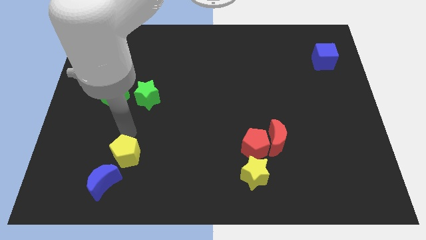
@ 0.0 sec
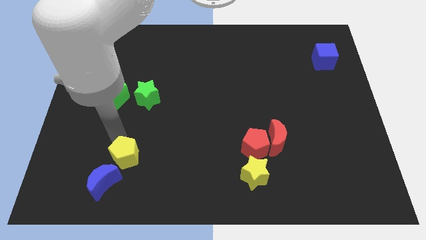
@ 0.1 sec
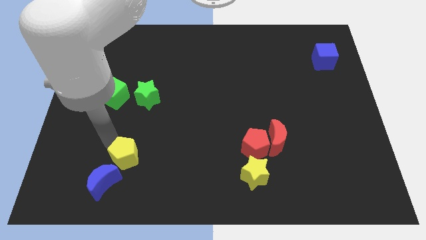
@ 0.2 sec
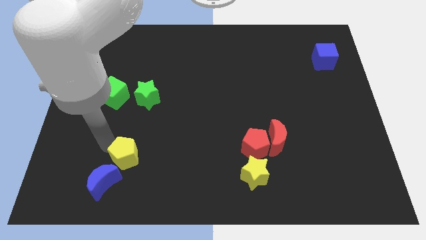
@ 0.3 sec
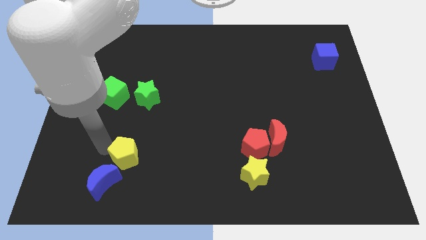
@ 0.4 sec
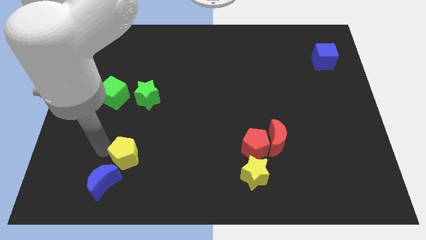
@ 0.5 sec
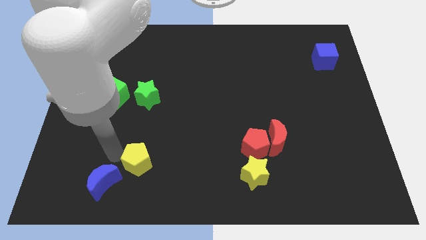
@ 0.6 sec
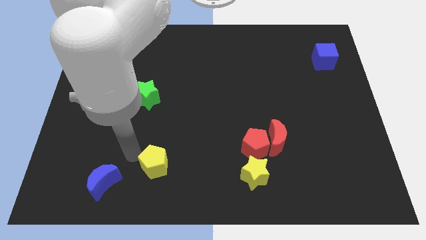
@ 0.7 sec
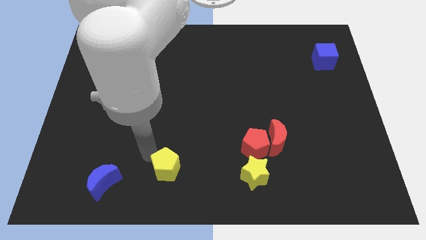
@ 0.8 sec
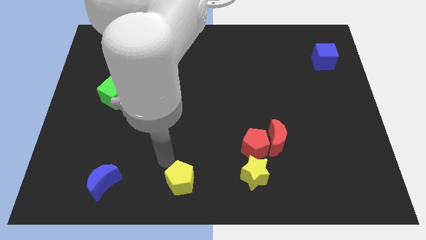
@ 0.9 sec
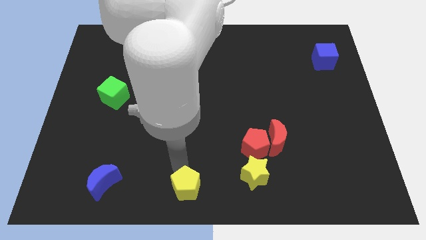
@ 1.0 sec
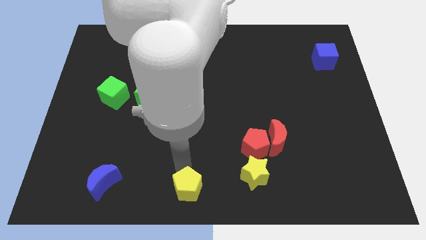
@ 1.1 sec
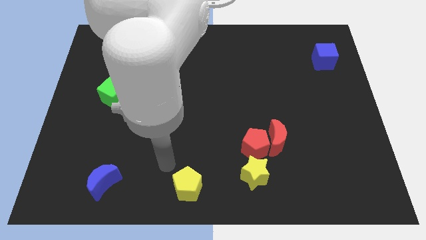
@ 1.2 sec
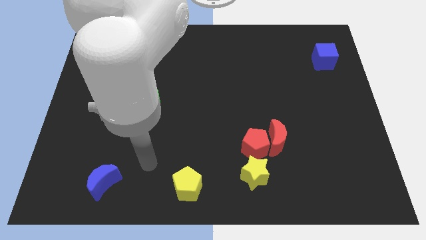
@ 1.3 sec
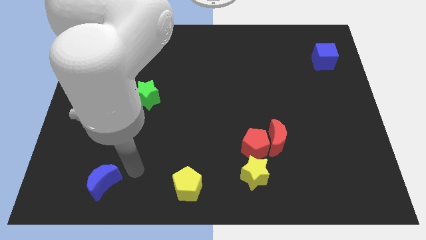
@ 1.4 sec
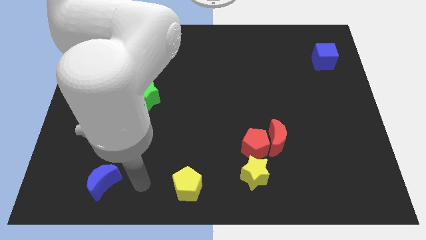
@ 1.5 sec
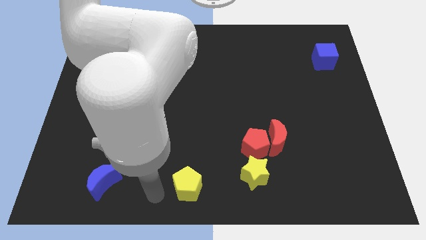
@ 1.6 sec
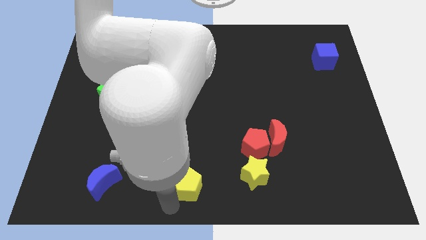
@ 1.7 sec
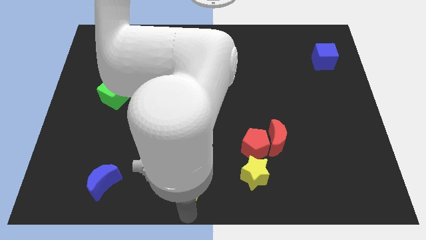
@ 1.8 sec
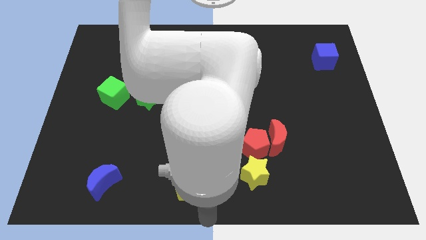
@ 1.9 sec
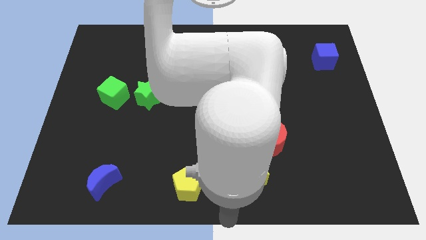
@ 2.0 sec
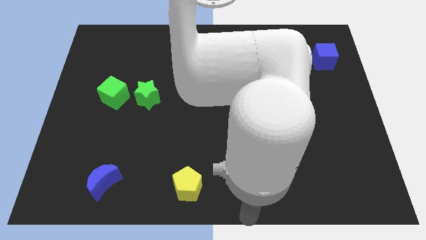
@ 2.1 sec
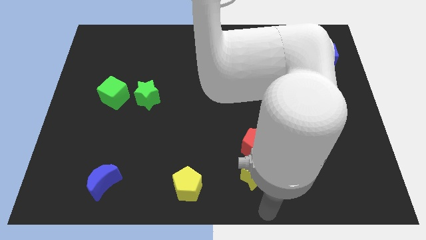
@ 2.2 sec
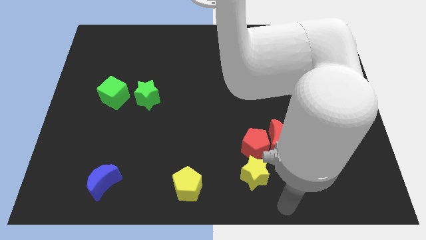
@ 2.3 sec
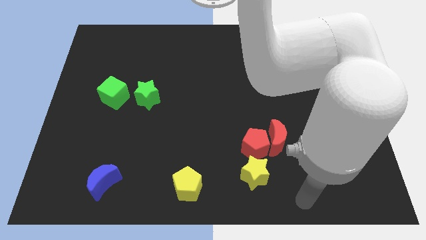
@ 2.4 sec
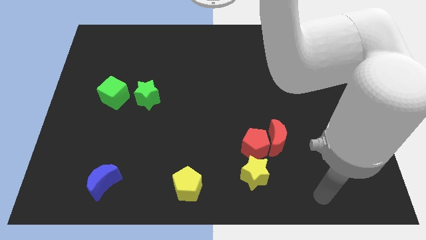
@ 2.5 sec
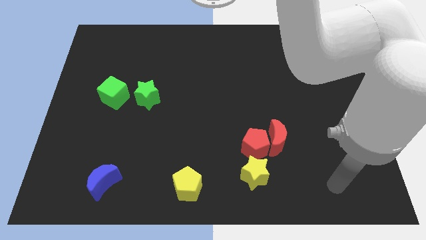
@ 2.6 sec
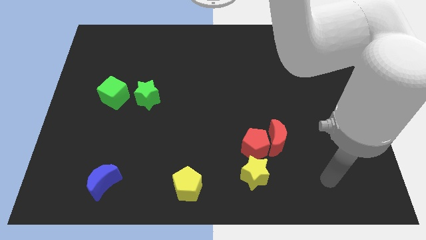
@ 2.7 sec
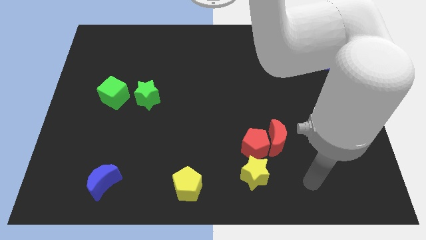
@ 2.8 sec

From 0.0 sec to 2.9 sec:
separate yellow pentagon from blue moon

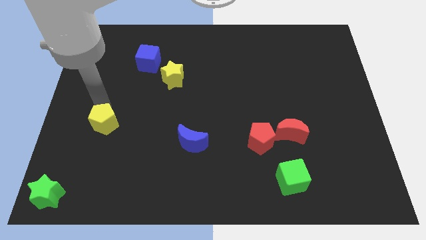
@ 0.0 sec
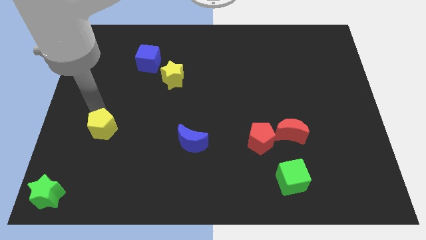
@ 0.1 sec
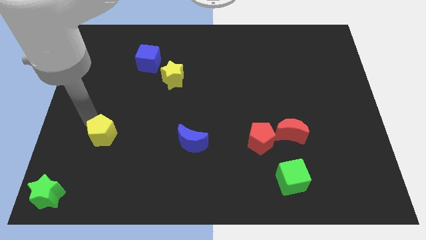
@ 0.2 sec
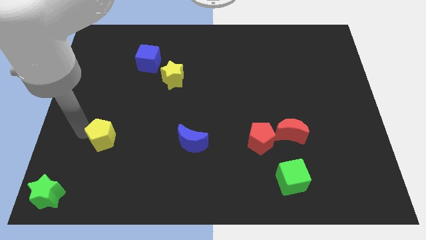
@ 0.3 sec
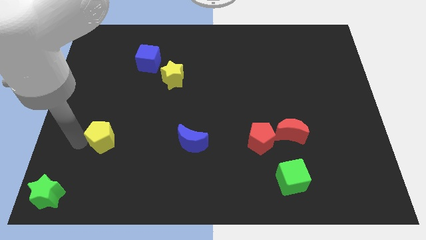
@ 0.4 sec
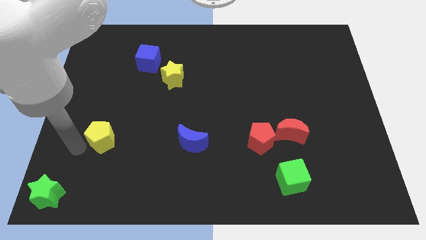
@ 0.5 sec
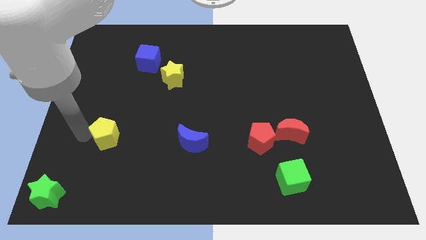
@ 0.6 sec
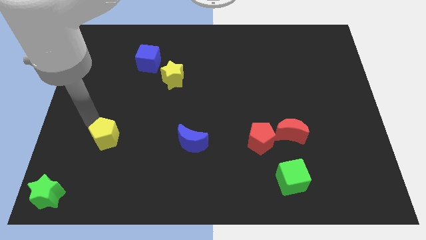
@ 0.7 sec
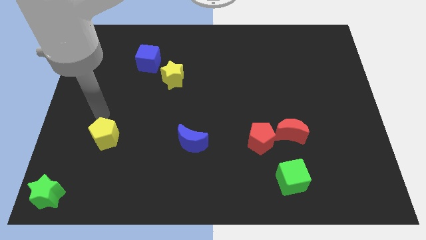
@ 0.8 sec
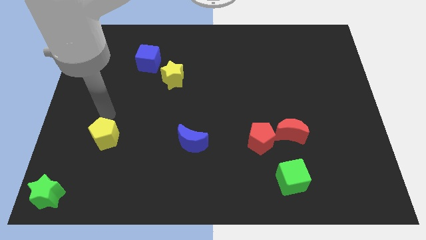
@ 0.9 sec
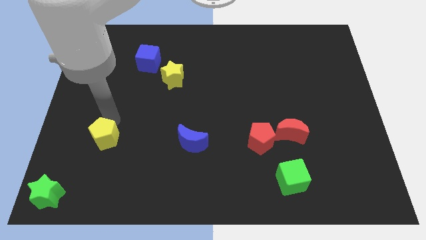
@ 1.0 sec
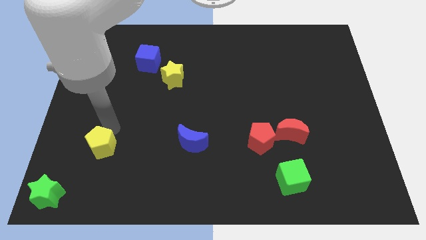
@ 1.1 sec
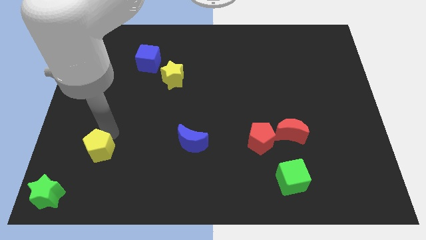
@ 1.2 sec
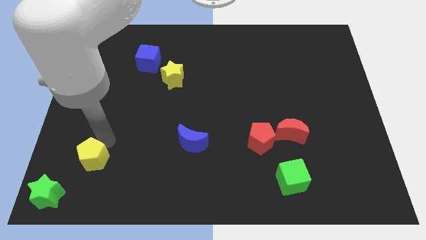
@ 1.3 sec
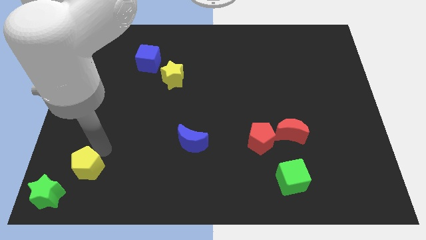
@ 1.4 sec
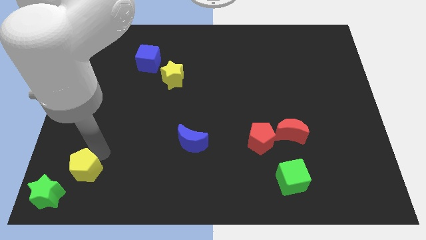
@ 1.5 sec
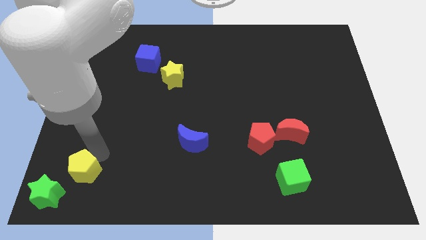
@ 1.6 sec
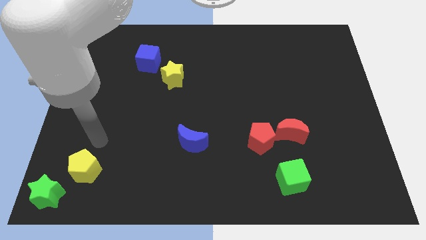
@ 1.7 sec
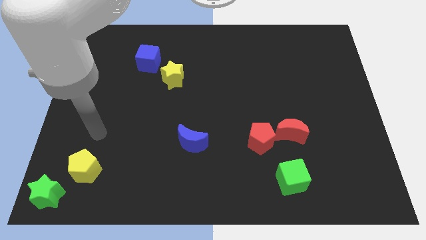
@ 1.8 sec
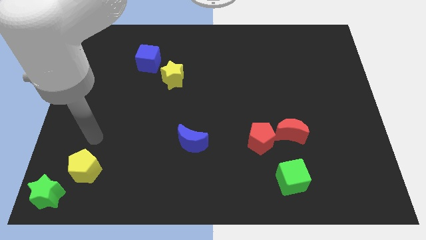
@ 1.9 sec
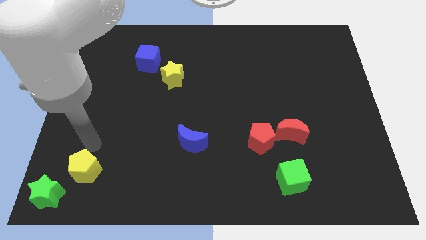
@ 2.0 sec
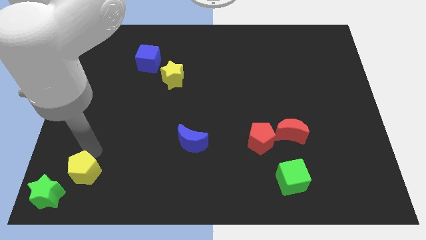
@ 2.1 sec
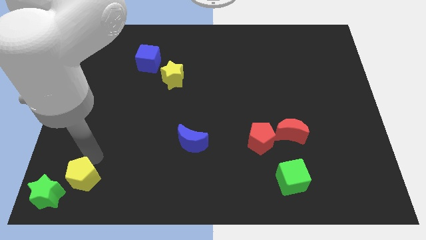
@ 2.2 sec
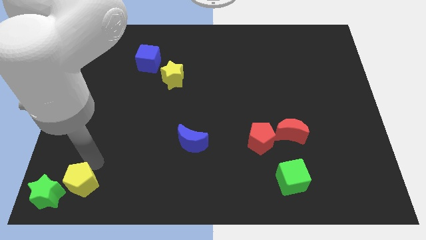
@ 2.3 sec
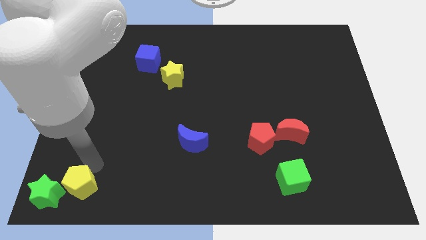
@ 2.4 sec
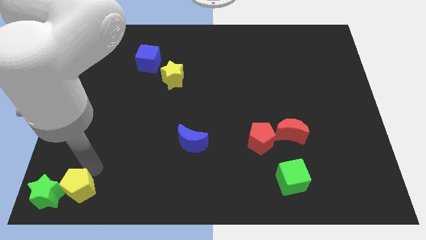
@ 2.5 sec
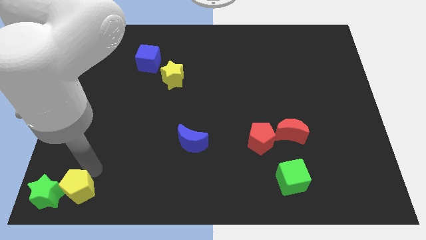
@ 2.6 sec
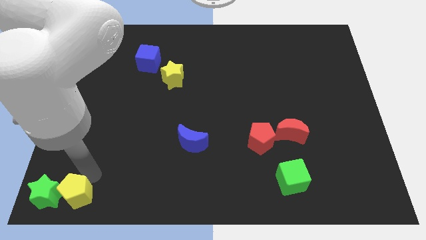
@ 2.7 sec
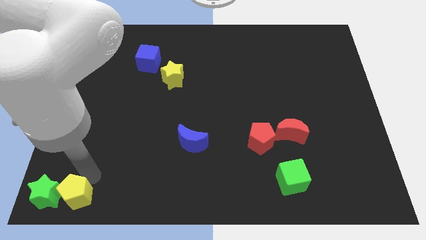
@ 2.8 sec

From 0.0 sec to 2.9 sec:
place yellow pentagon beside green star

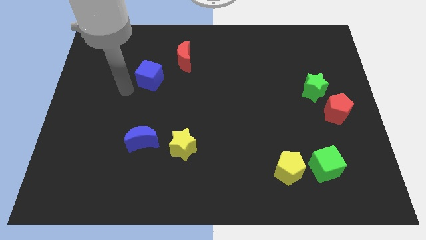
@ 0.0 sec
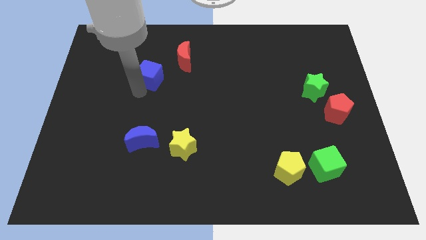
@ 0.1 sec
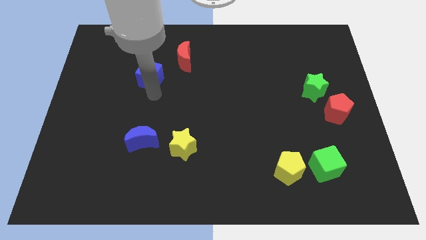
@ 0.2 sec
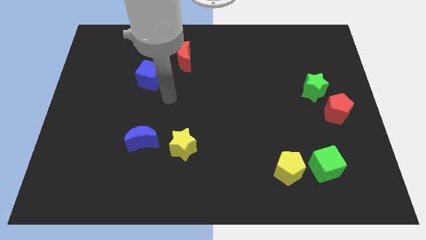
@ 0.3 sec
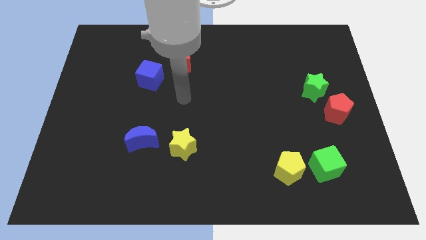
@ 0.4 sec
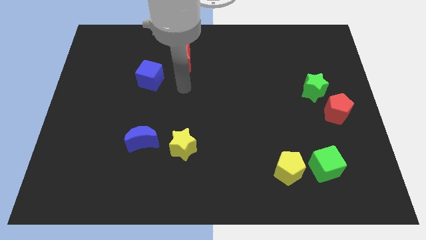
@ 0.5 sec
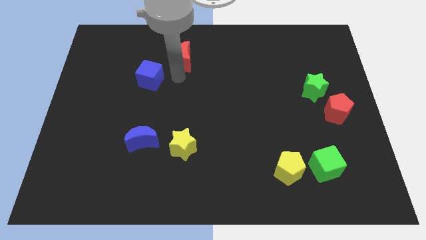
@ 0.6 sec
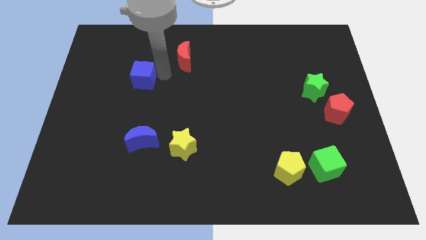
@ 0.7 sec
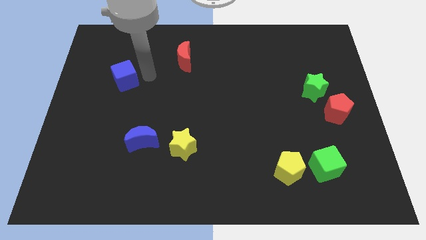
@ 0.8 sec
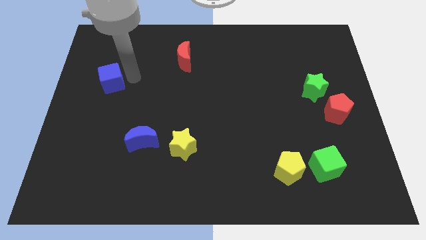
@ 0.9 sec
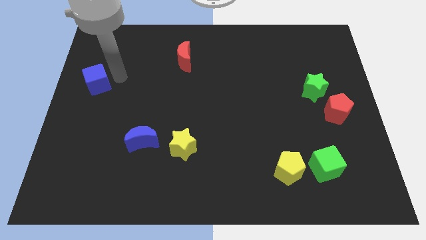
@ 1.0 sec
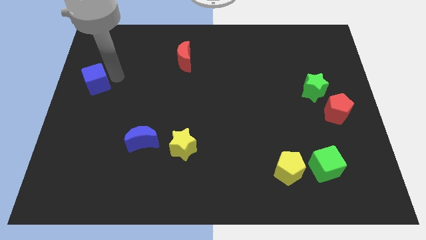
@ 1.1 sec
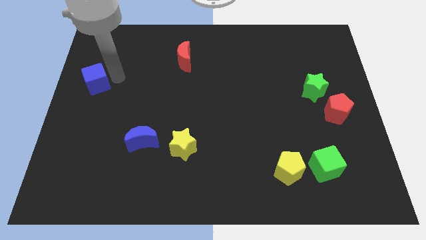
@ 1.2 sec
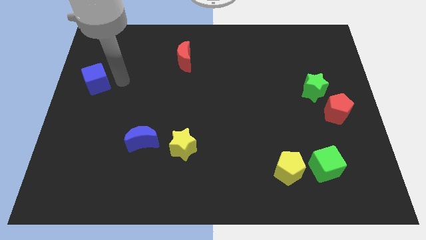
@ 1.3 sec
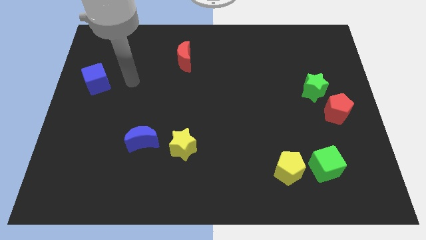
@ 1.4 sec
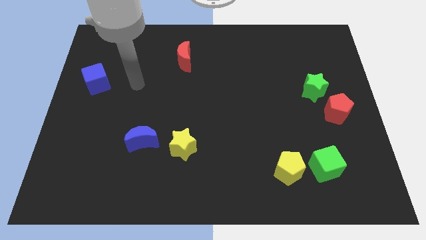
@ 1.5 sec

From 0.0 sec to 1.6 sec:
push the blue cube left side of the board

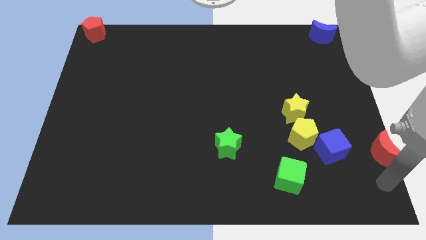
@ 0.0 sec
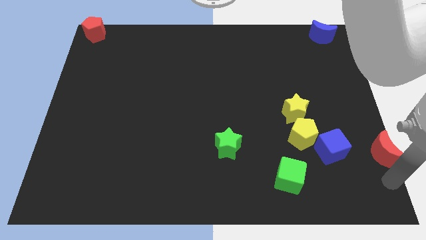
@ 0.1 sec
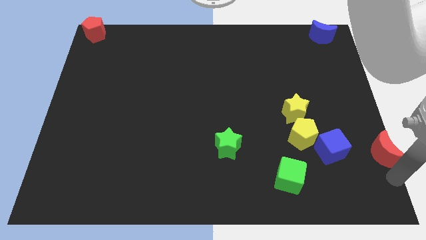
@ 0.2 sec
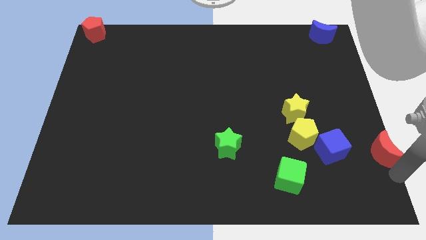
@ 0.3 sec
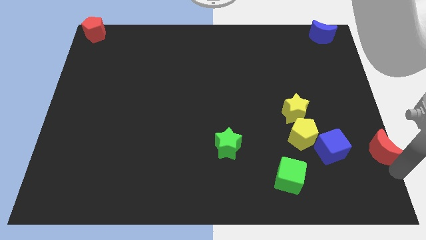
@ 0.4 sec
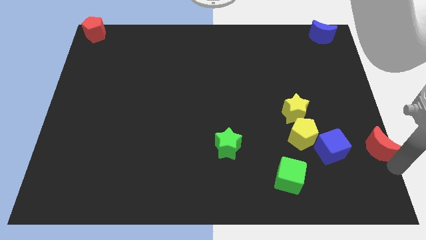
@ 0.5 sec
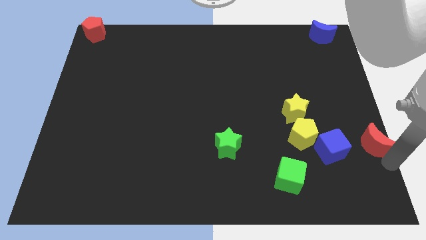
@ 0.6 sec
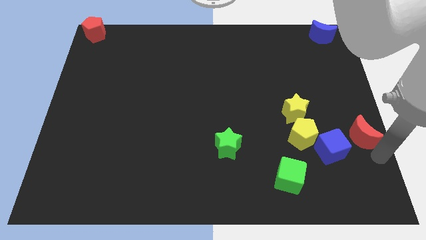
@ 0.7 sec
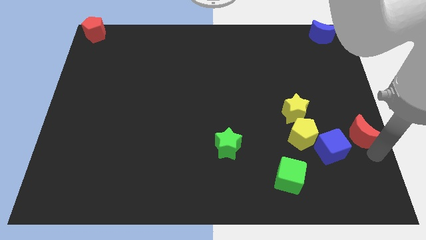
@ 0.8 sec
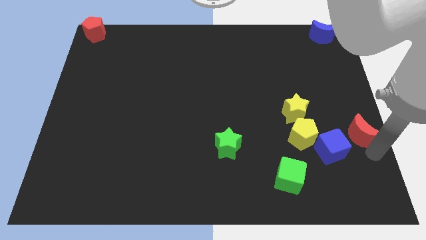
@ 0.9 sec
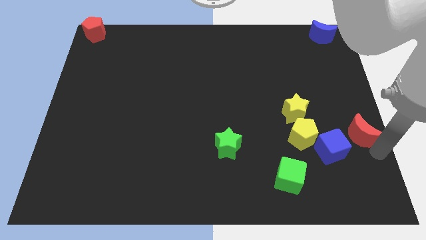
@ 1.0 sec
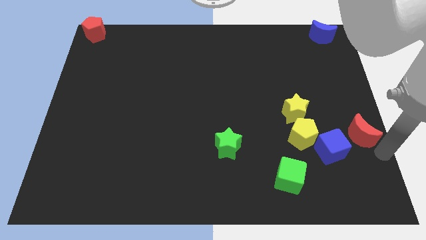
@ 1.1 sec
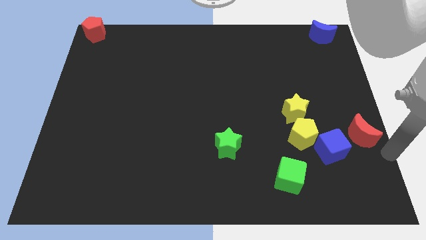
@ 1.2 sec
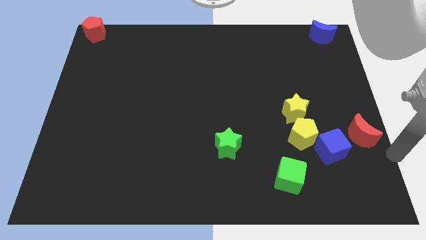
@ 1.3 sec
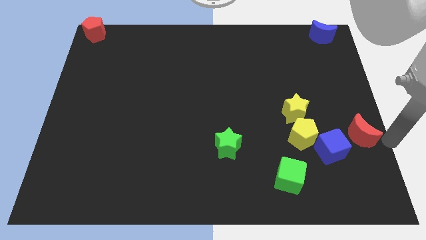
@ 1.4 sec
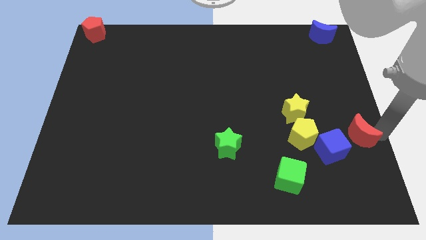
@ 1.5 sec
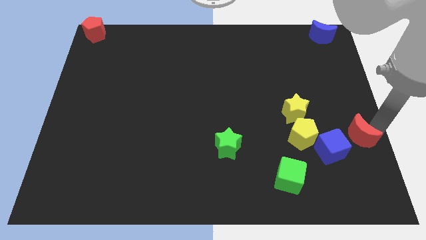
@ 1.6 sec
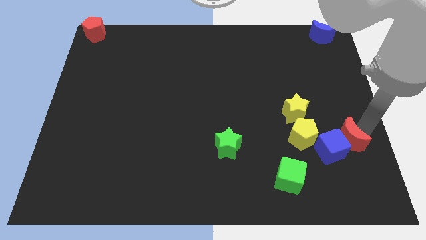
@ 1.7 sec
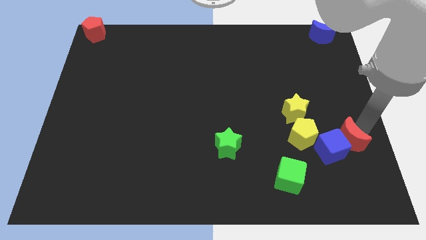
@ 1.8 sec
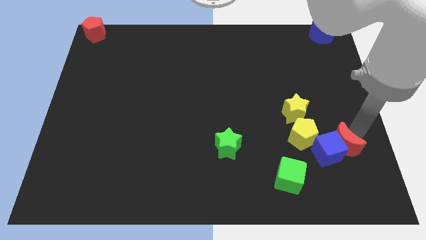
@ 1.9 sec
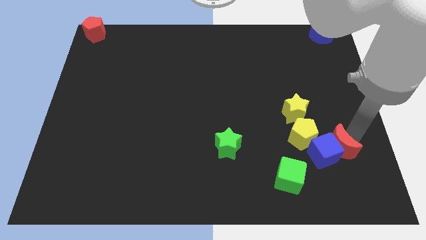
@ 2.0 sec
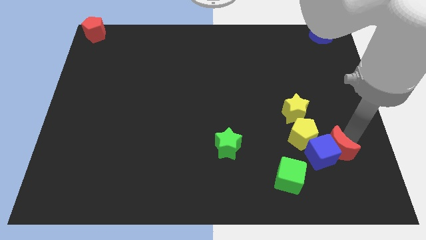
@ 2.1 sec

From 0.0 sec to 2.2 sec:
push the red crescent into the blue cube
